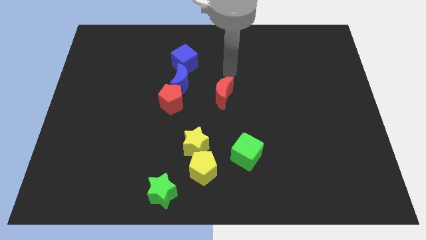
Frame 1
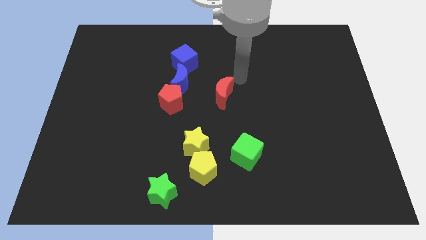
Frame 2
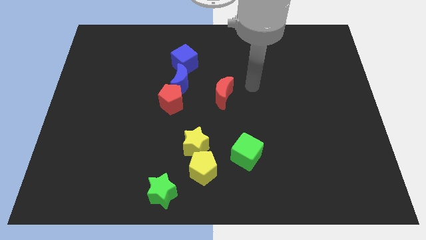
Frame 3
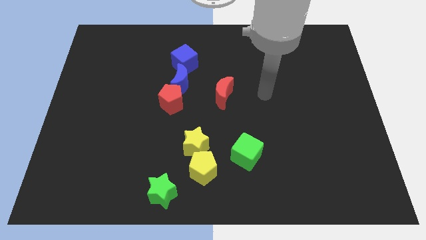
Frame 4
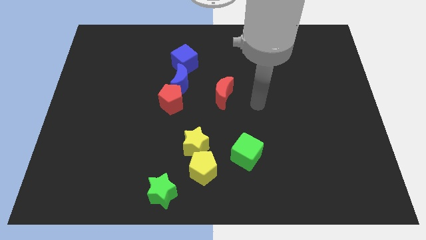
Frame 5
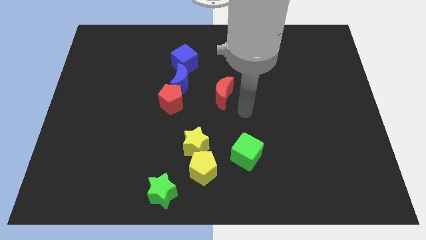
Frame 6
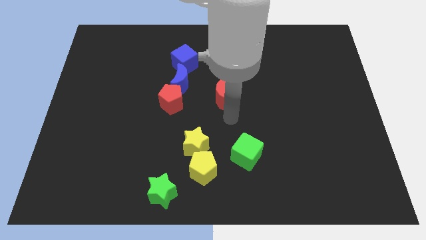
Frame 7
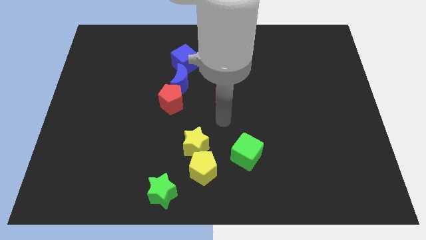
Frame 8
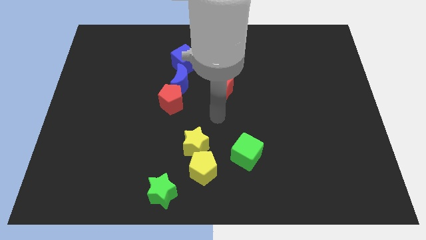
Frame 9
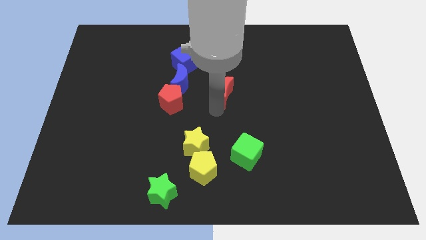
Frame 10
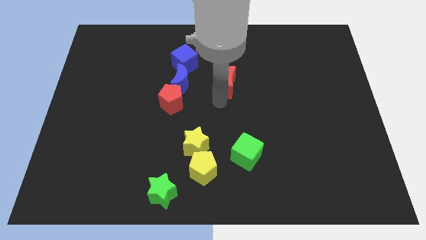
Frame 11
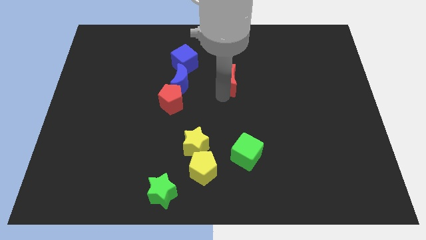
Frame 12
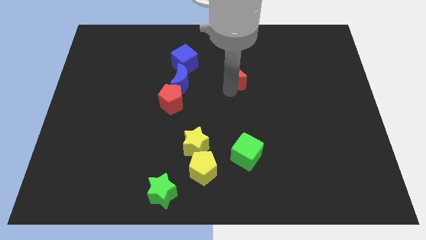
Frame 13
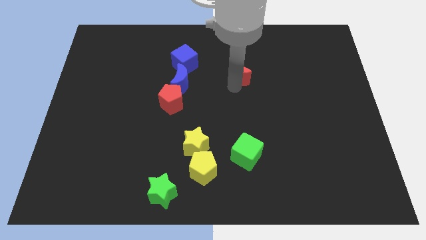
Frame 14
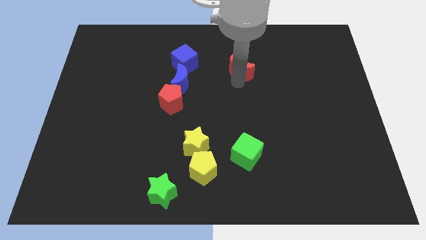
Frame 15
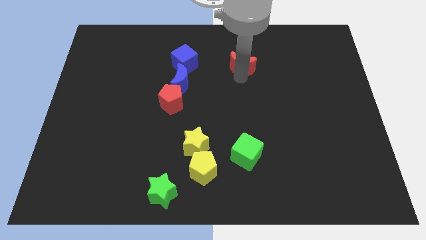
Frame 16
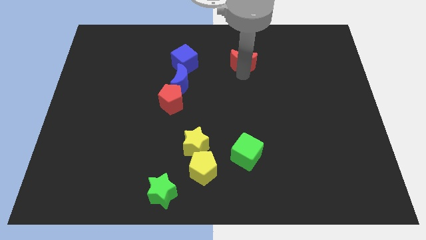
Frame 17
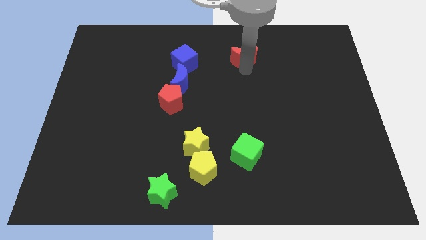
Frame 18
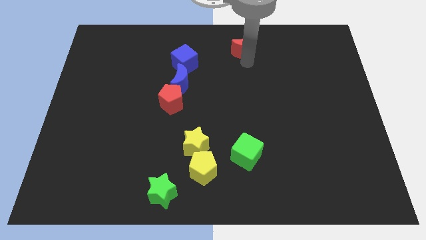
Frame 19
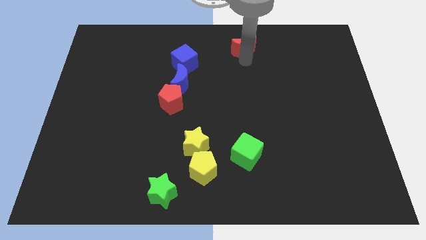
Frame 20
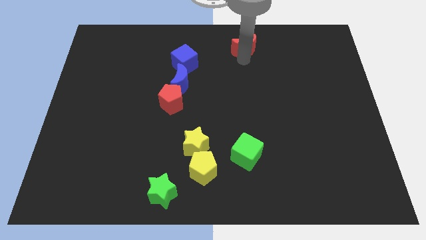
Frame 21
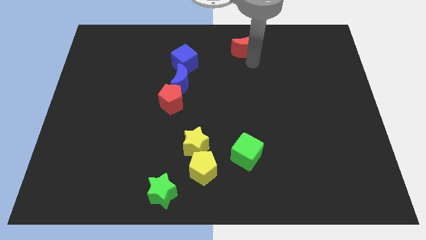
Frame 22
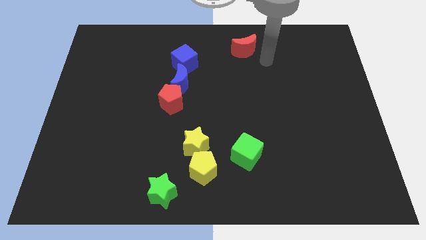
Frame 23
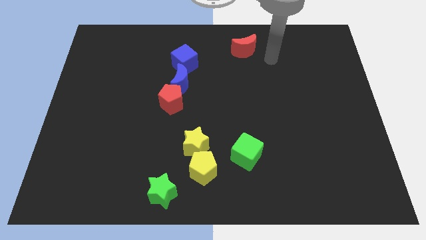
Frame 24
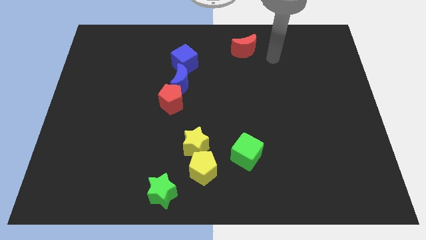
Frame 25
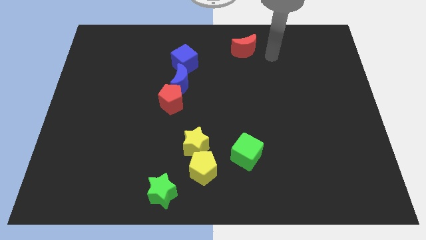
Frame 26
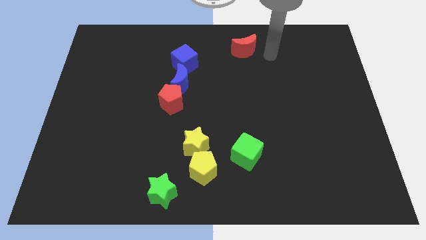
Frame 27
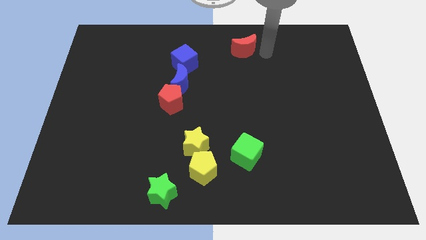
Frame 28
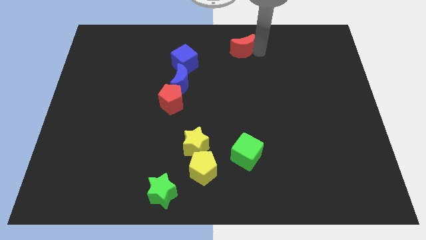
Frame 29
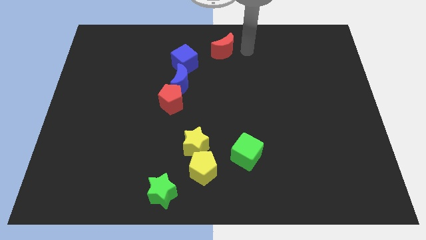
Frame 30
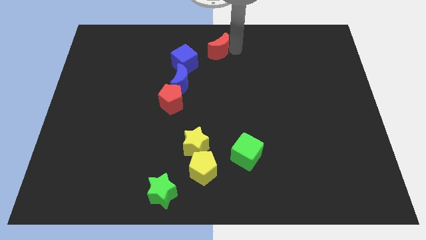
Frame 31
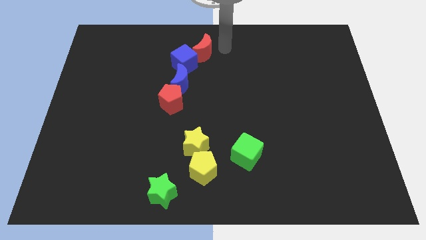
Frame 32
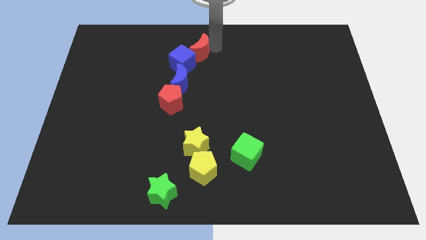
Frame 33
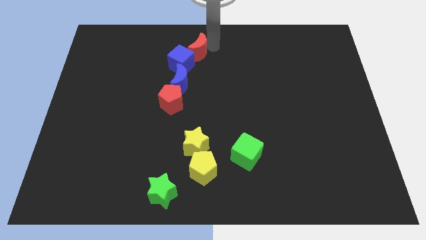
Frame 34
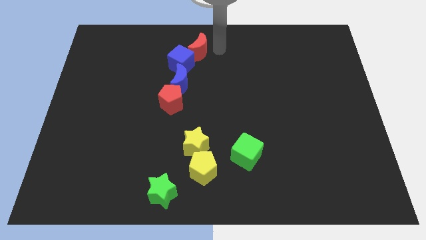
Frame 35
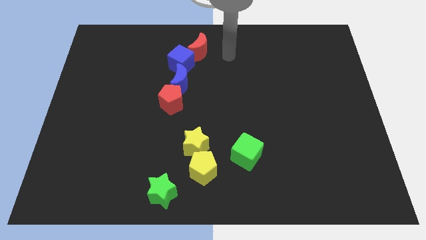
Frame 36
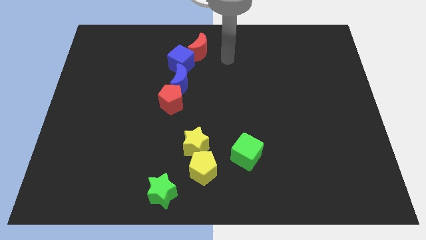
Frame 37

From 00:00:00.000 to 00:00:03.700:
slide the red moon diagonally top right to the red pentagon

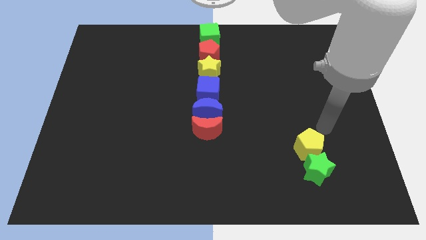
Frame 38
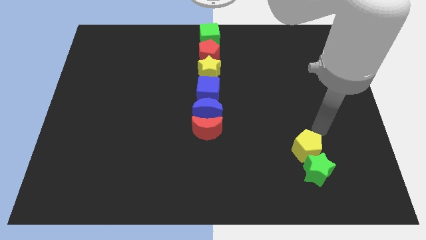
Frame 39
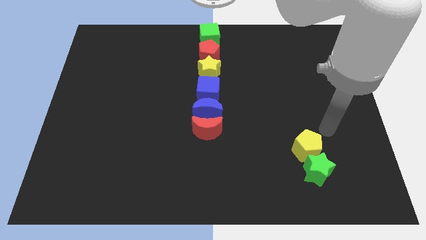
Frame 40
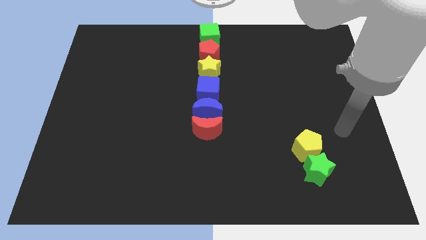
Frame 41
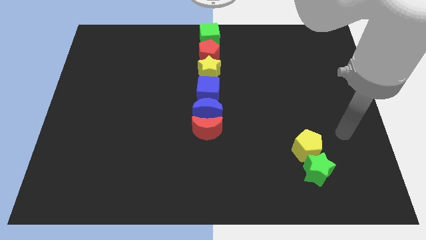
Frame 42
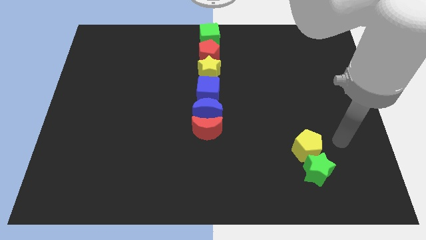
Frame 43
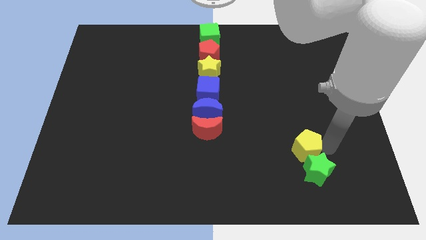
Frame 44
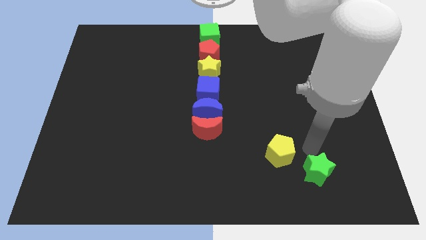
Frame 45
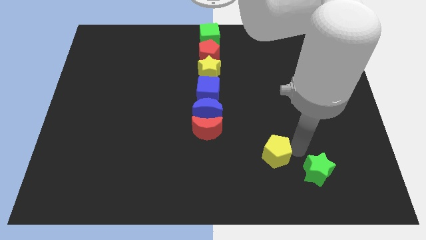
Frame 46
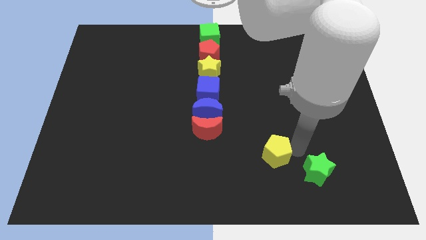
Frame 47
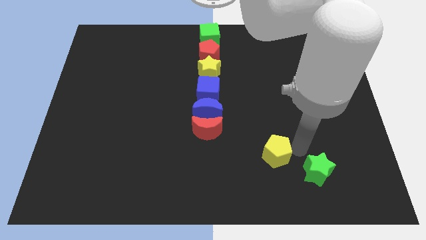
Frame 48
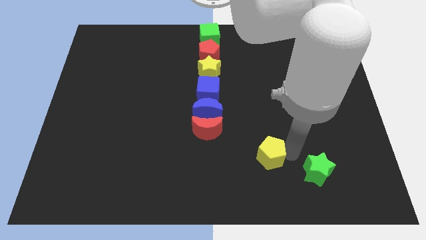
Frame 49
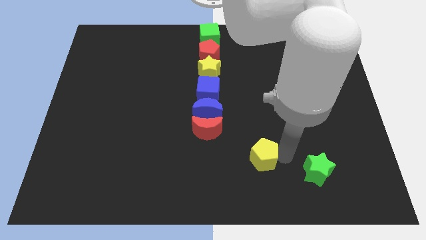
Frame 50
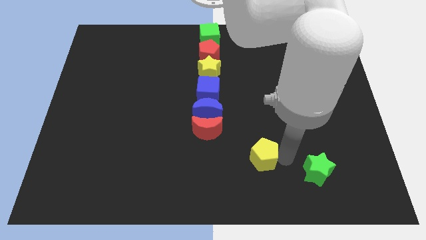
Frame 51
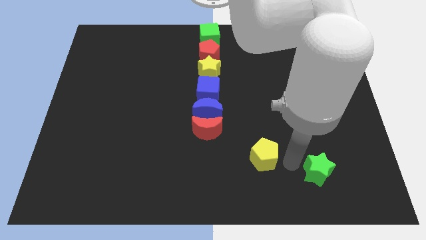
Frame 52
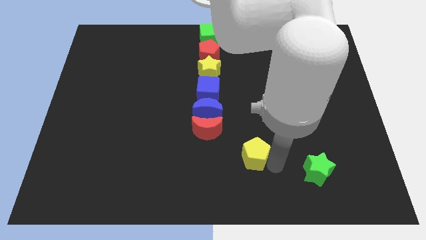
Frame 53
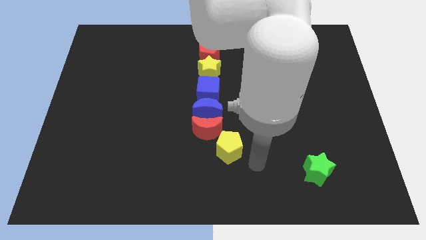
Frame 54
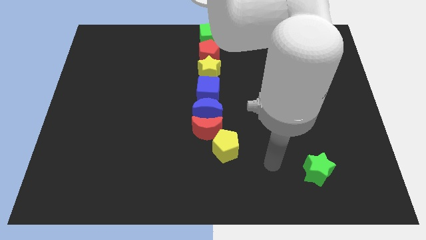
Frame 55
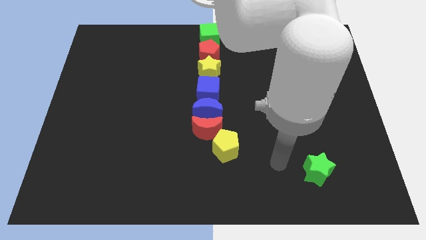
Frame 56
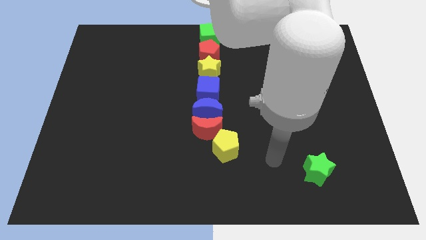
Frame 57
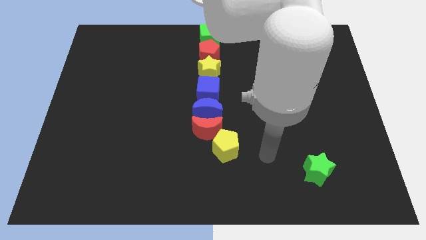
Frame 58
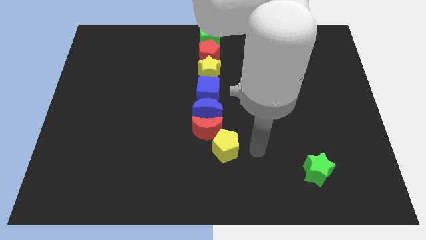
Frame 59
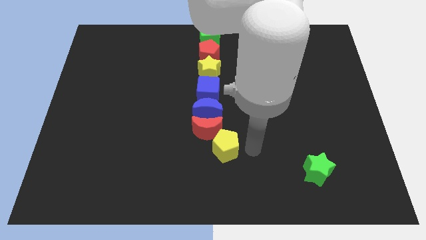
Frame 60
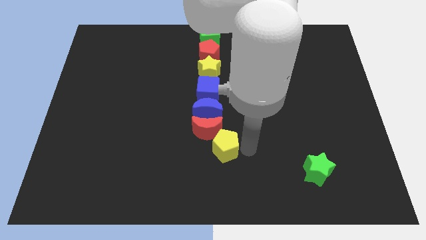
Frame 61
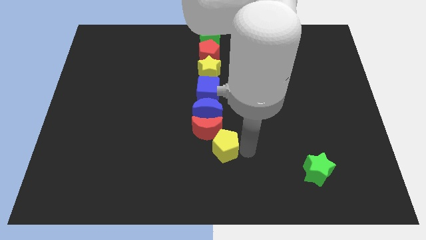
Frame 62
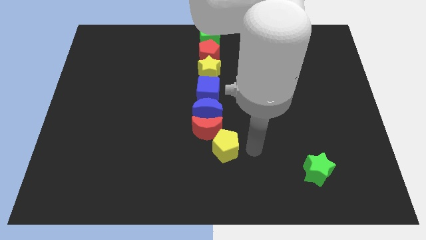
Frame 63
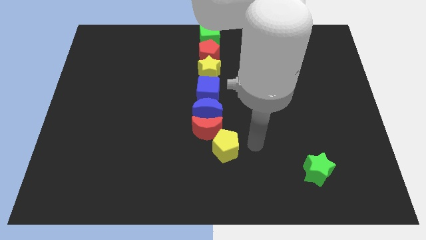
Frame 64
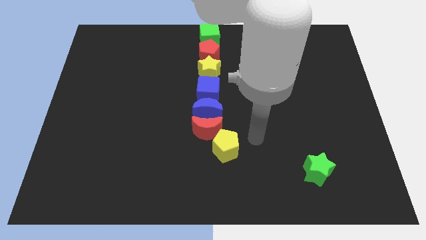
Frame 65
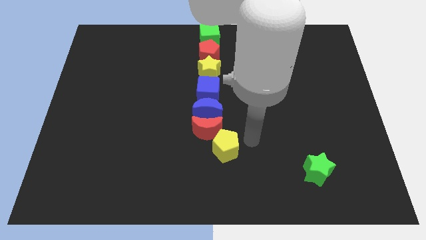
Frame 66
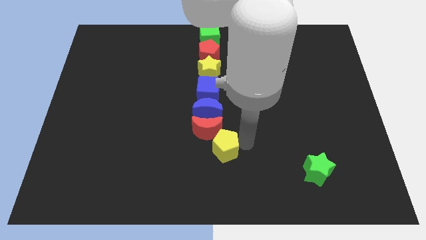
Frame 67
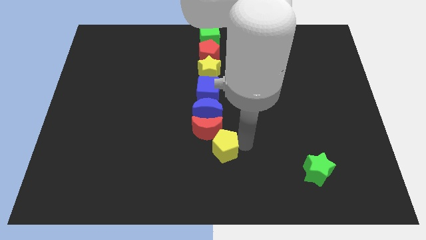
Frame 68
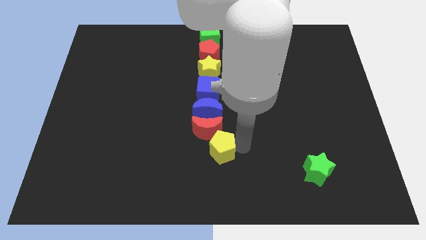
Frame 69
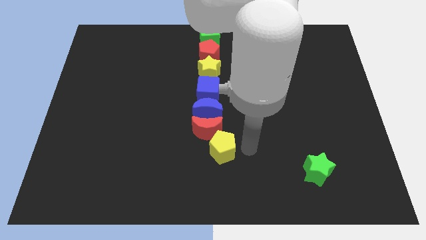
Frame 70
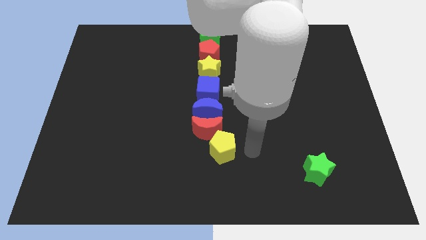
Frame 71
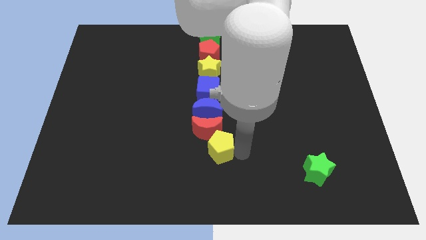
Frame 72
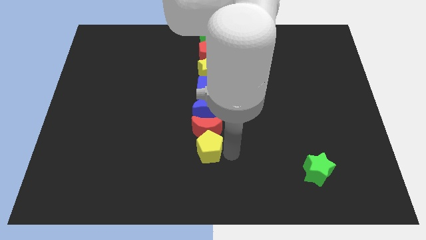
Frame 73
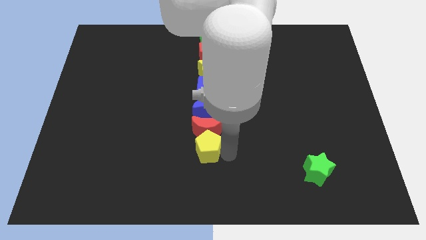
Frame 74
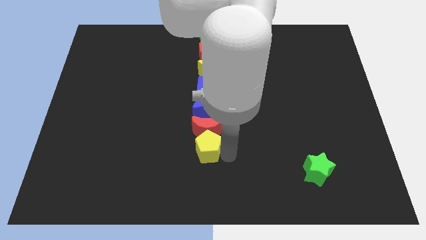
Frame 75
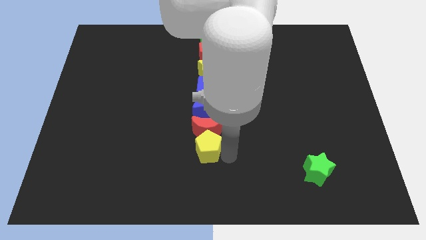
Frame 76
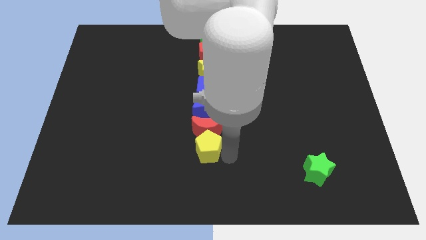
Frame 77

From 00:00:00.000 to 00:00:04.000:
put the yellow pentagon below the red crescent

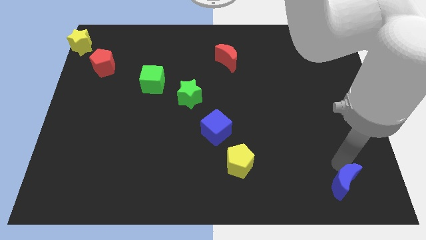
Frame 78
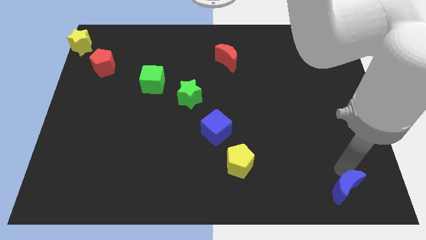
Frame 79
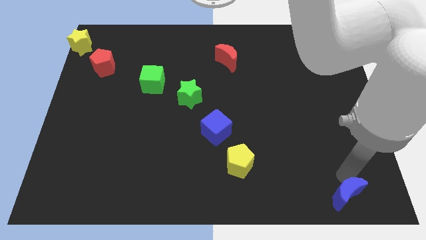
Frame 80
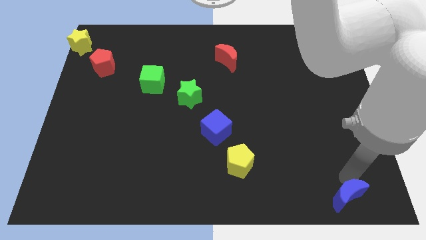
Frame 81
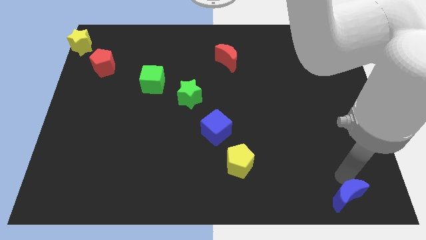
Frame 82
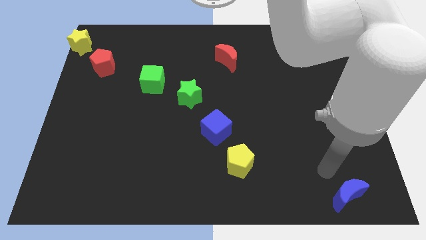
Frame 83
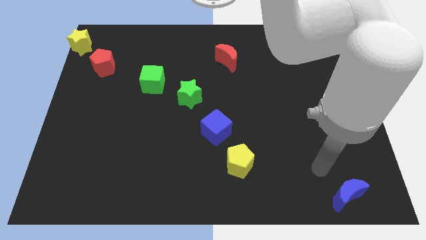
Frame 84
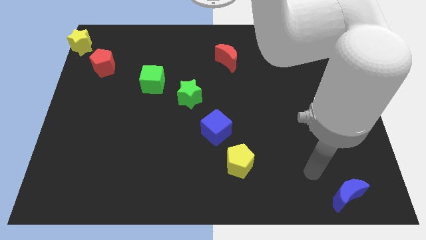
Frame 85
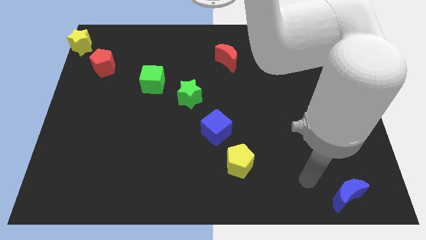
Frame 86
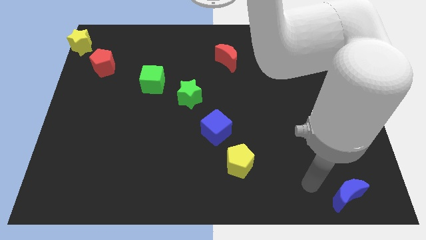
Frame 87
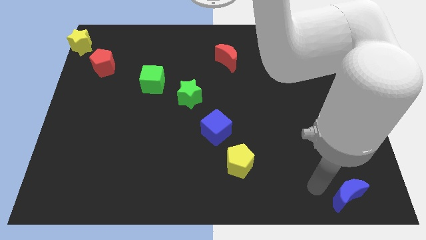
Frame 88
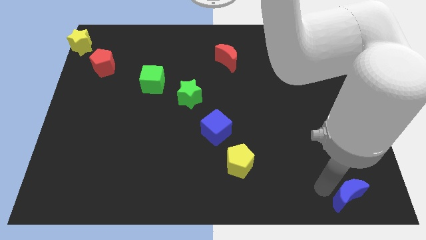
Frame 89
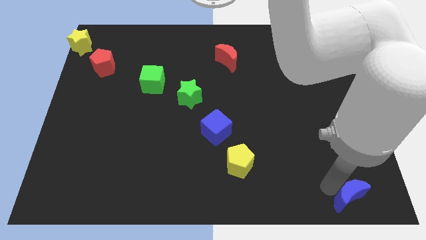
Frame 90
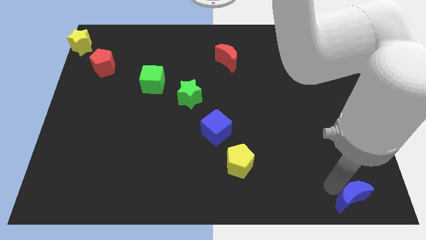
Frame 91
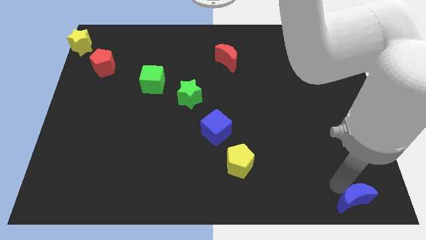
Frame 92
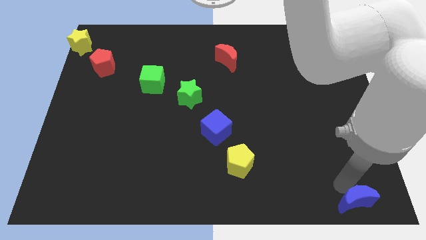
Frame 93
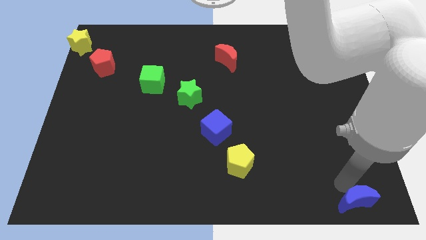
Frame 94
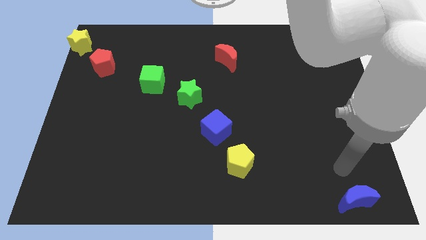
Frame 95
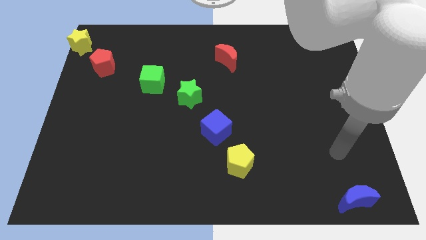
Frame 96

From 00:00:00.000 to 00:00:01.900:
place the blue moon to the bottom right corner of the board
